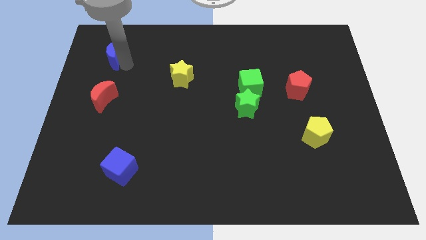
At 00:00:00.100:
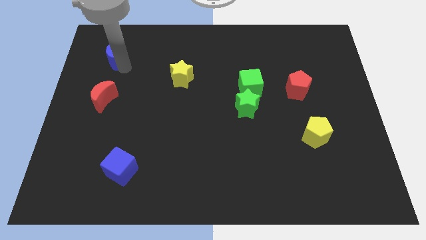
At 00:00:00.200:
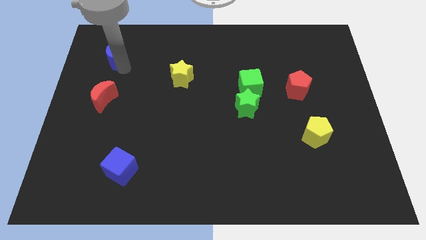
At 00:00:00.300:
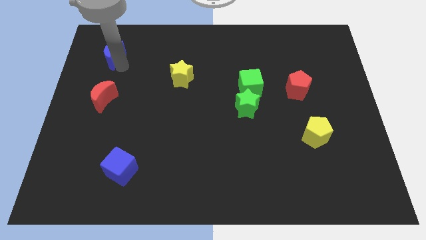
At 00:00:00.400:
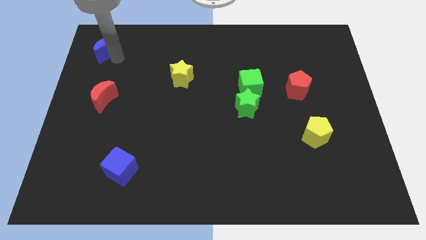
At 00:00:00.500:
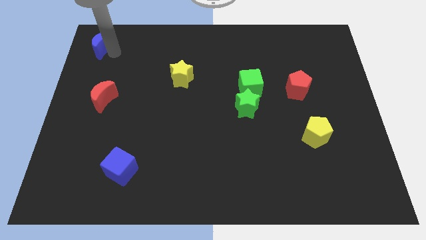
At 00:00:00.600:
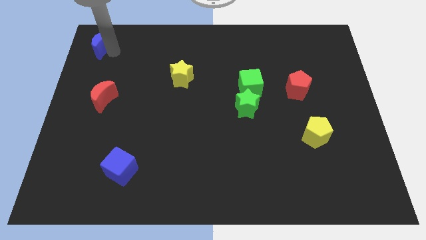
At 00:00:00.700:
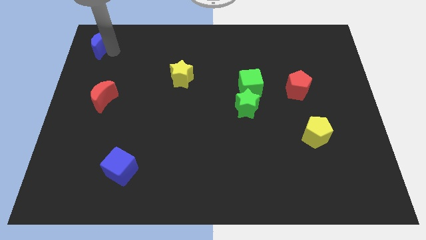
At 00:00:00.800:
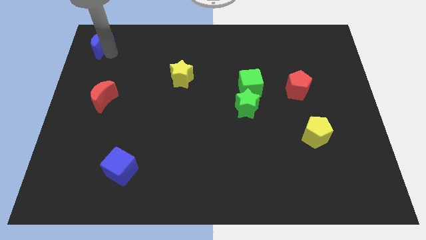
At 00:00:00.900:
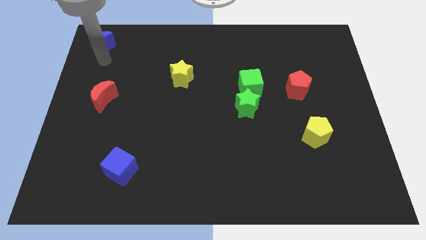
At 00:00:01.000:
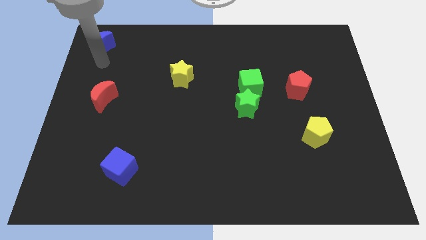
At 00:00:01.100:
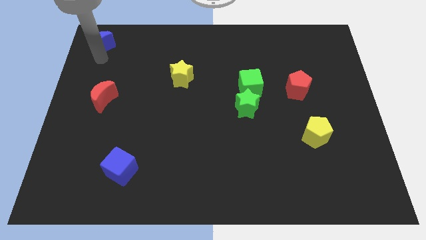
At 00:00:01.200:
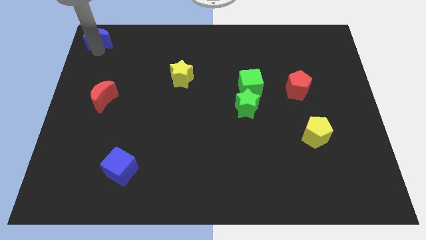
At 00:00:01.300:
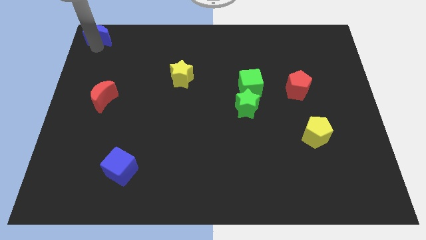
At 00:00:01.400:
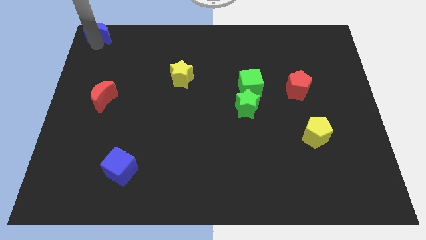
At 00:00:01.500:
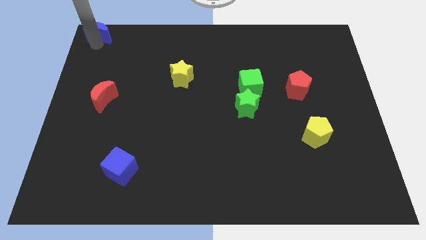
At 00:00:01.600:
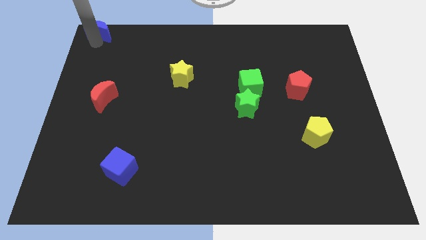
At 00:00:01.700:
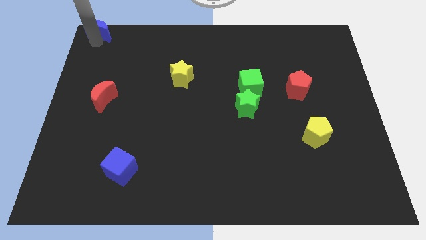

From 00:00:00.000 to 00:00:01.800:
move the blue crescent to the top left corner of the board

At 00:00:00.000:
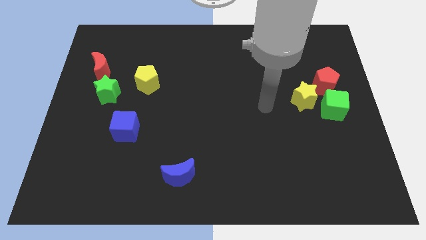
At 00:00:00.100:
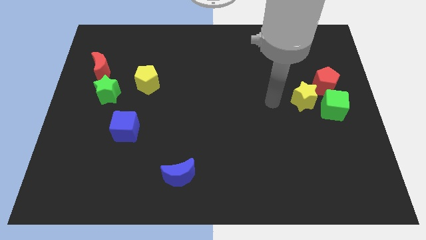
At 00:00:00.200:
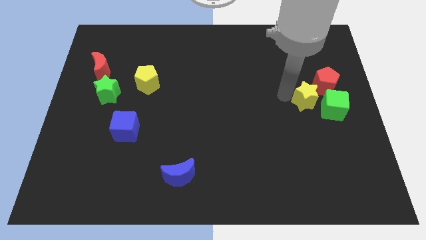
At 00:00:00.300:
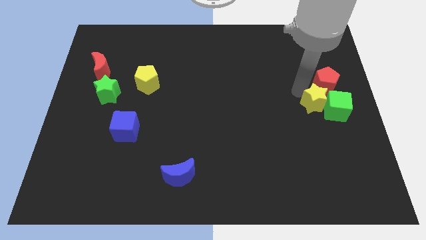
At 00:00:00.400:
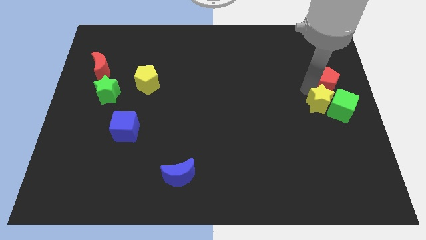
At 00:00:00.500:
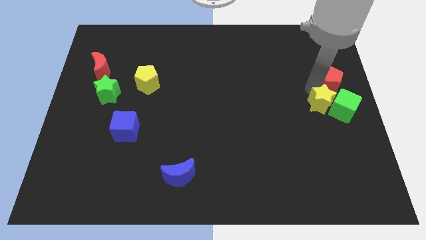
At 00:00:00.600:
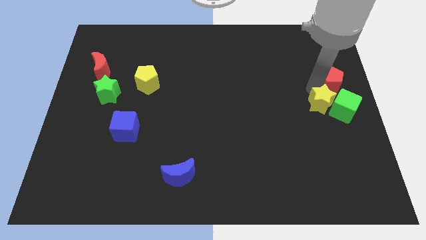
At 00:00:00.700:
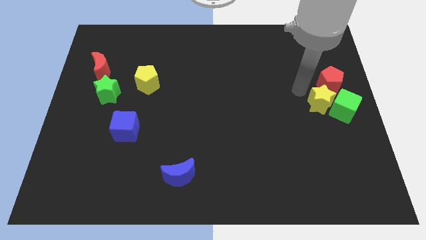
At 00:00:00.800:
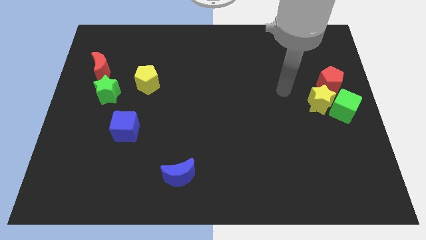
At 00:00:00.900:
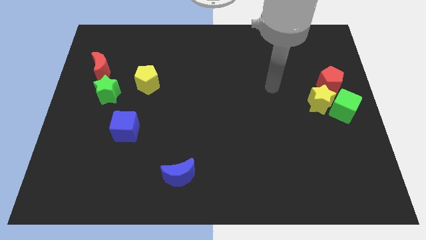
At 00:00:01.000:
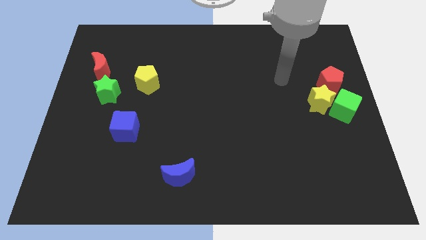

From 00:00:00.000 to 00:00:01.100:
place yellow star below red pentagon

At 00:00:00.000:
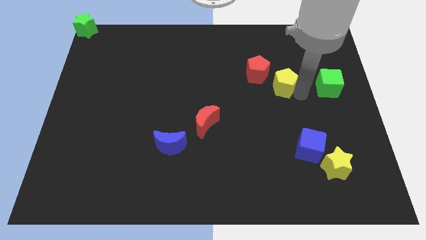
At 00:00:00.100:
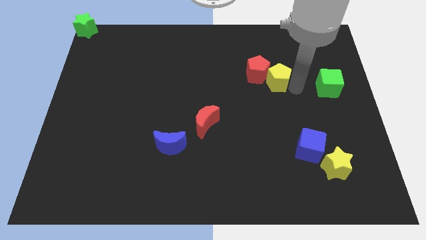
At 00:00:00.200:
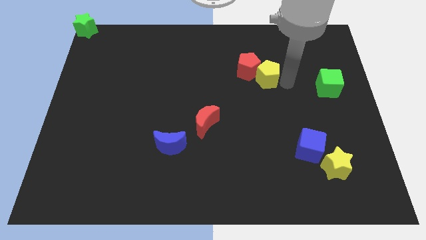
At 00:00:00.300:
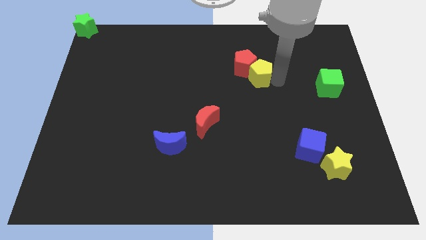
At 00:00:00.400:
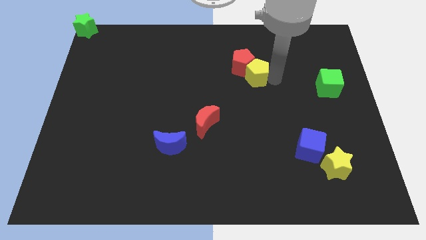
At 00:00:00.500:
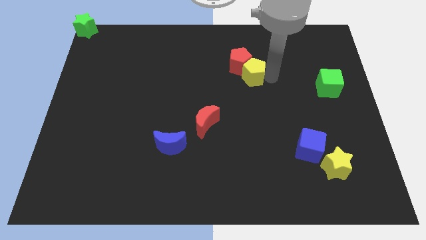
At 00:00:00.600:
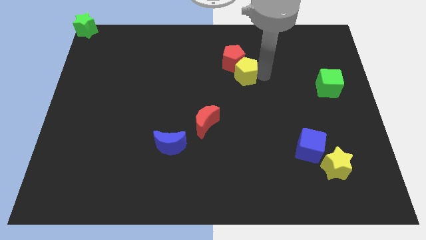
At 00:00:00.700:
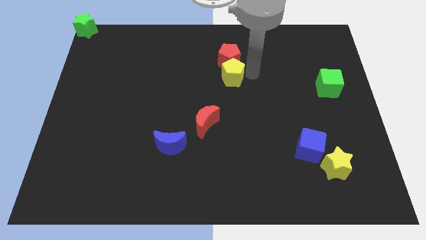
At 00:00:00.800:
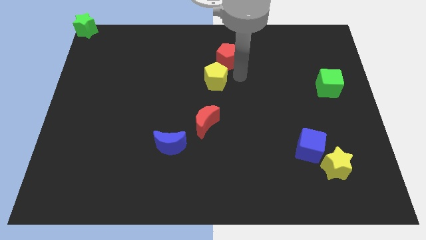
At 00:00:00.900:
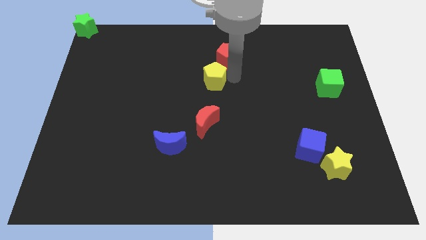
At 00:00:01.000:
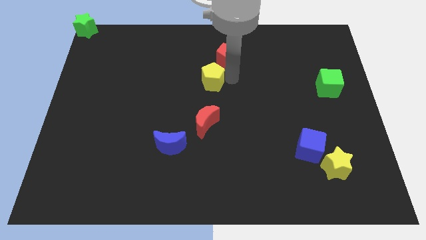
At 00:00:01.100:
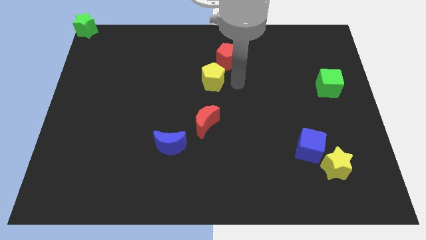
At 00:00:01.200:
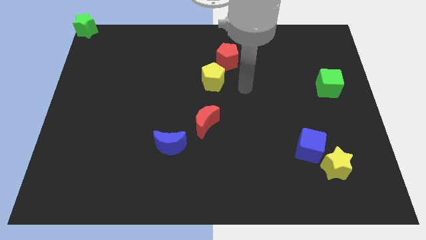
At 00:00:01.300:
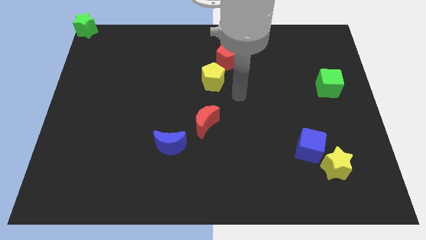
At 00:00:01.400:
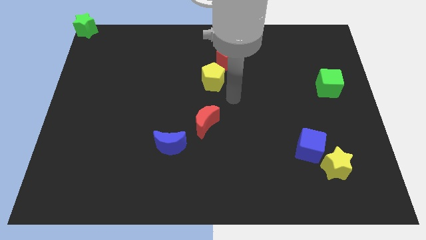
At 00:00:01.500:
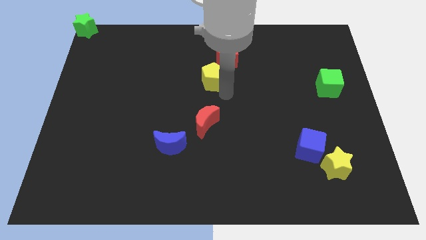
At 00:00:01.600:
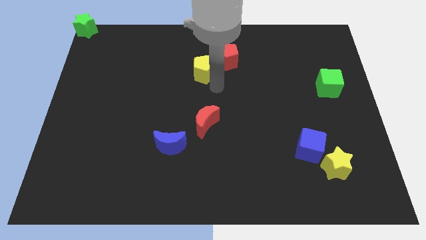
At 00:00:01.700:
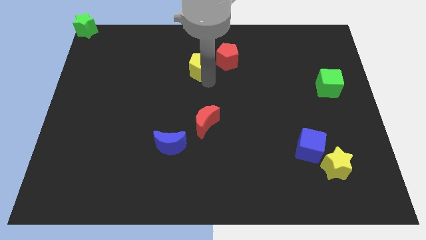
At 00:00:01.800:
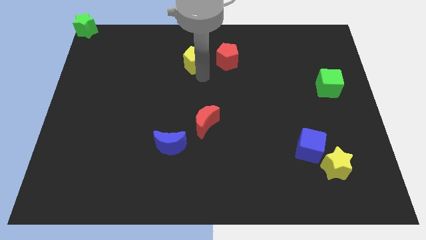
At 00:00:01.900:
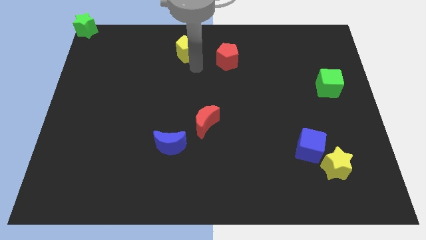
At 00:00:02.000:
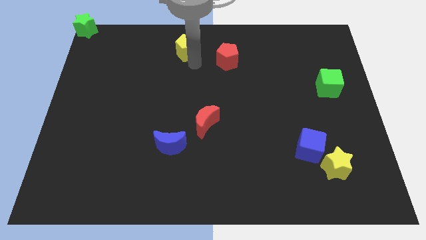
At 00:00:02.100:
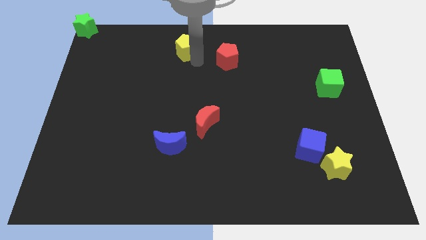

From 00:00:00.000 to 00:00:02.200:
move yellow pentagon towards top

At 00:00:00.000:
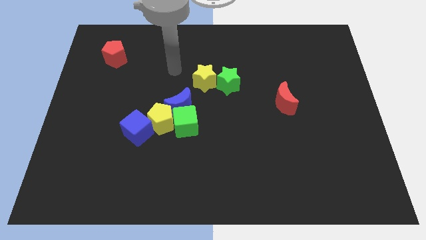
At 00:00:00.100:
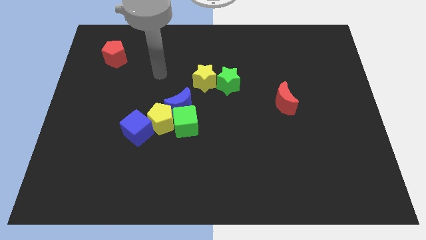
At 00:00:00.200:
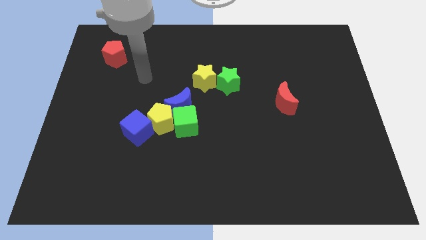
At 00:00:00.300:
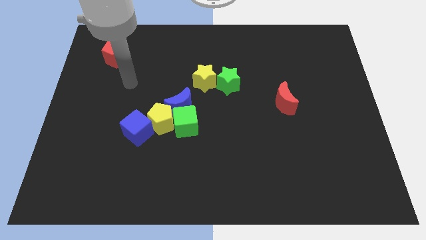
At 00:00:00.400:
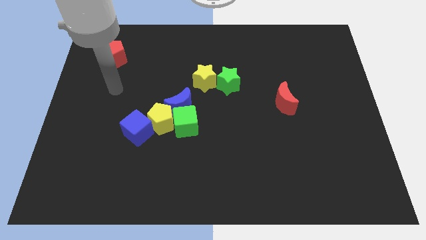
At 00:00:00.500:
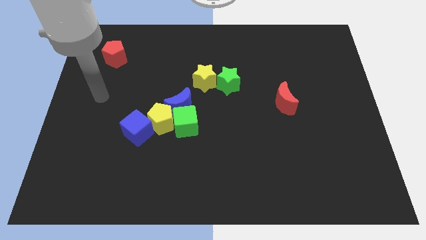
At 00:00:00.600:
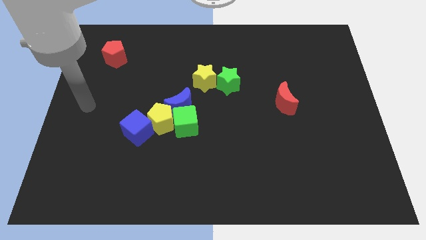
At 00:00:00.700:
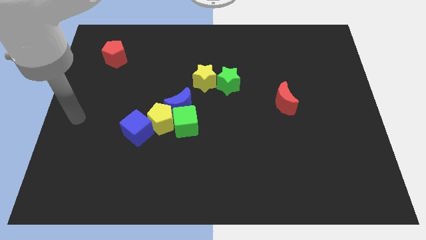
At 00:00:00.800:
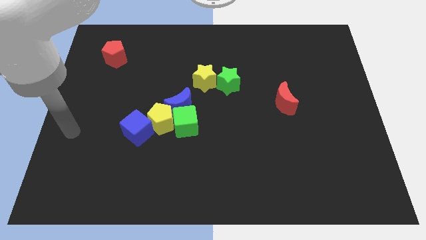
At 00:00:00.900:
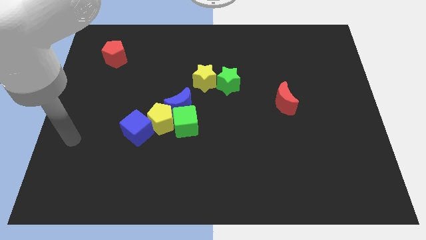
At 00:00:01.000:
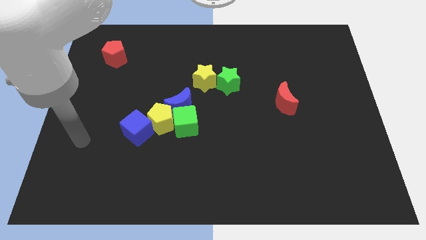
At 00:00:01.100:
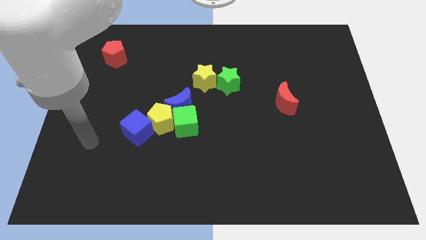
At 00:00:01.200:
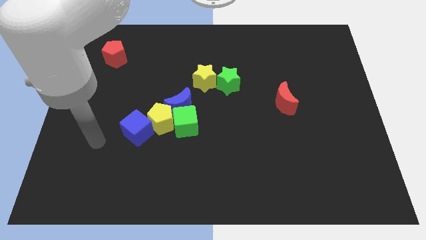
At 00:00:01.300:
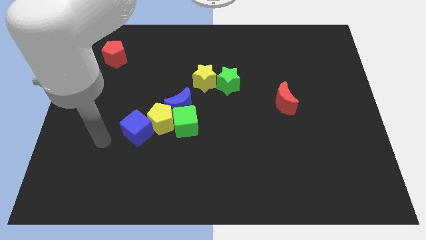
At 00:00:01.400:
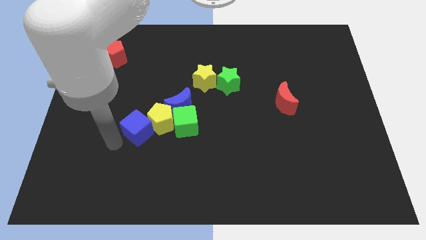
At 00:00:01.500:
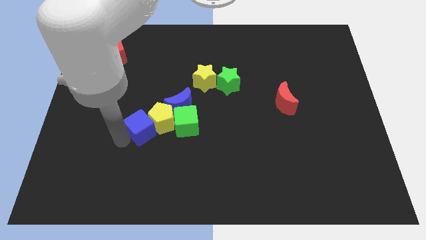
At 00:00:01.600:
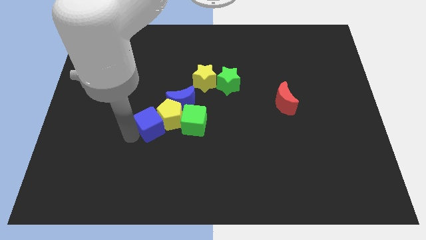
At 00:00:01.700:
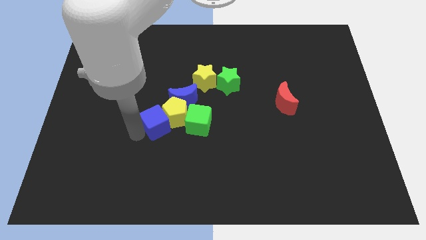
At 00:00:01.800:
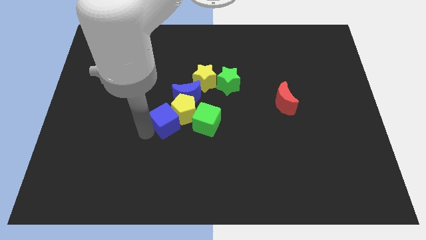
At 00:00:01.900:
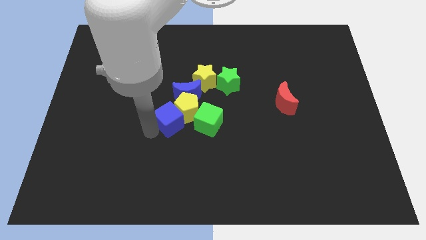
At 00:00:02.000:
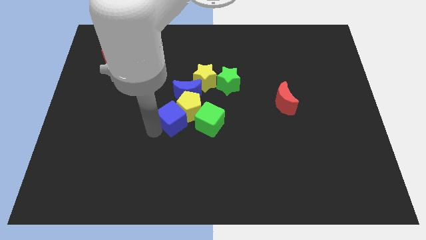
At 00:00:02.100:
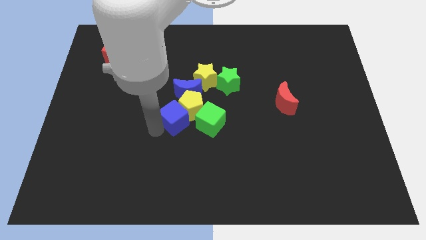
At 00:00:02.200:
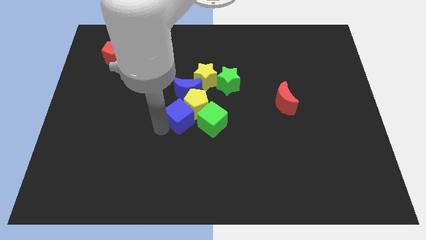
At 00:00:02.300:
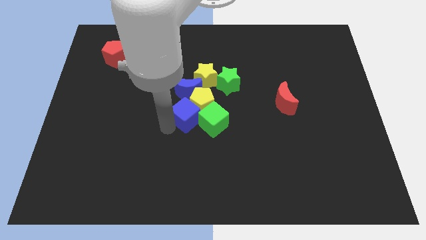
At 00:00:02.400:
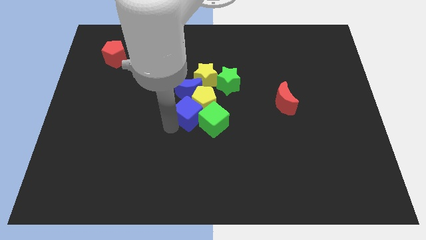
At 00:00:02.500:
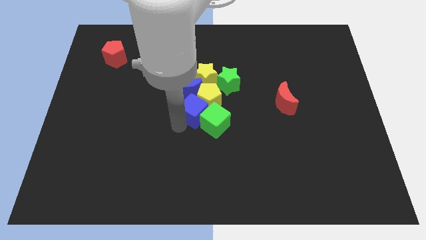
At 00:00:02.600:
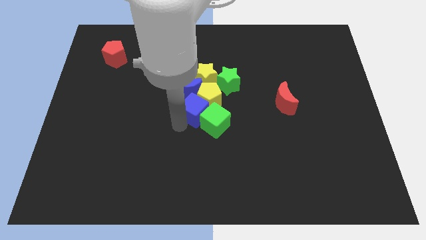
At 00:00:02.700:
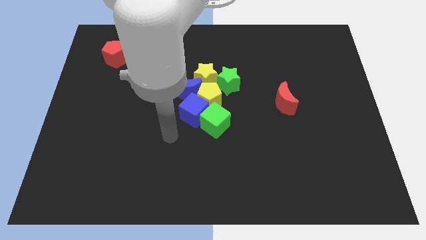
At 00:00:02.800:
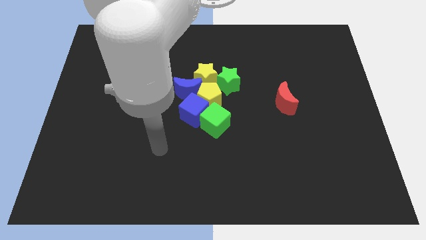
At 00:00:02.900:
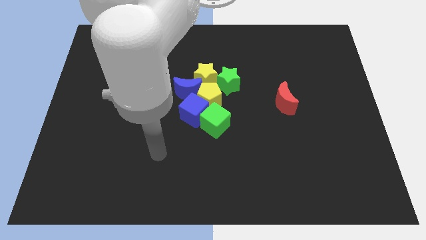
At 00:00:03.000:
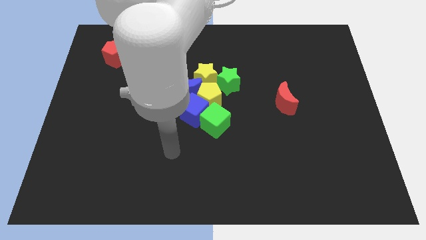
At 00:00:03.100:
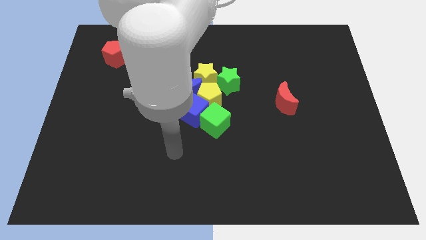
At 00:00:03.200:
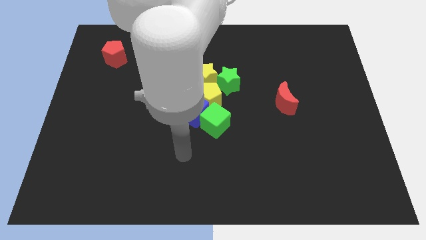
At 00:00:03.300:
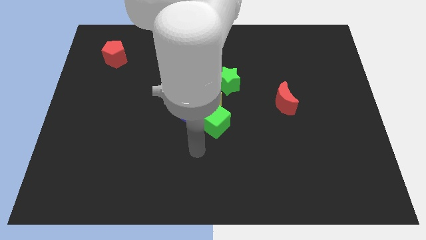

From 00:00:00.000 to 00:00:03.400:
move the blue cube to the left of the yellow pentagon towards the center

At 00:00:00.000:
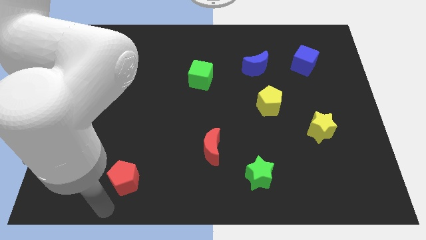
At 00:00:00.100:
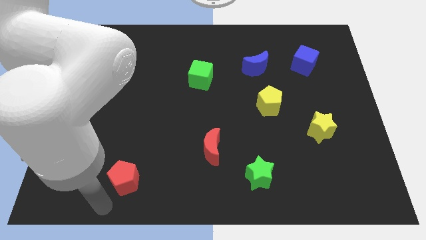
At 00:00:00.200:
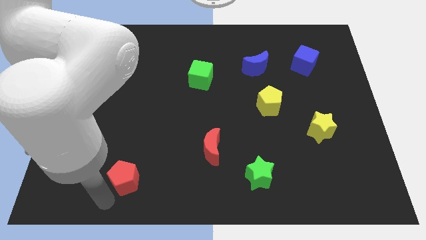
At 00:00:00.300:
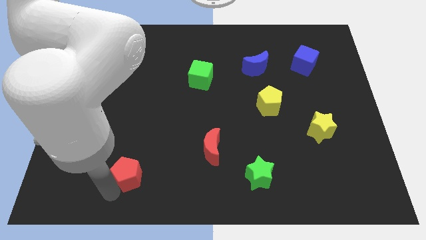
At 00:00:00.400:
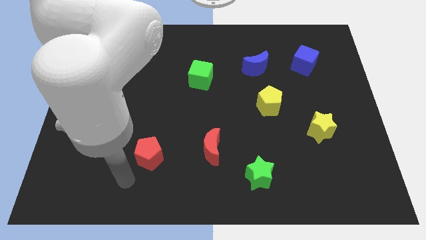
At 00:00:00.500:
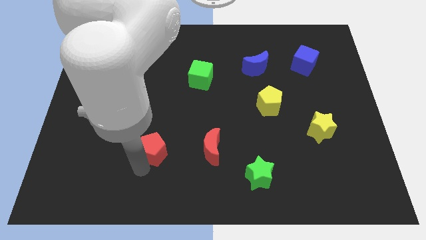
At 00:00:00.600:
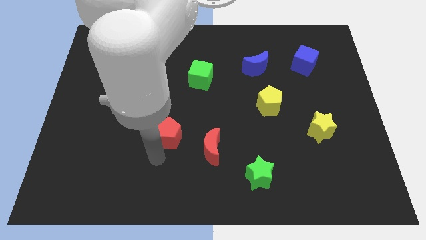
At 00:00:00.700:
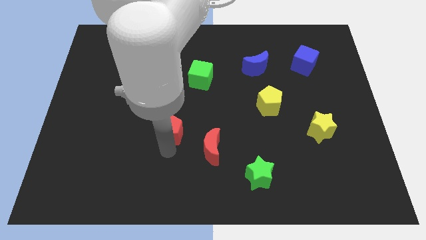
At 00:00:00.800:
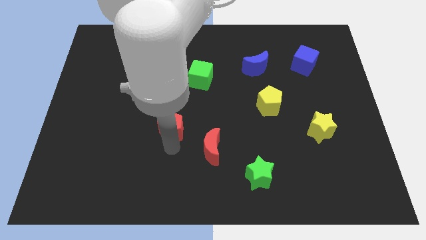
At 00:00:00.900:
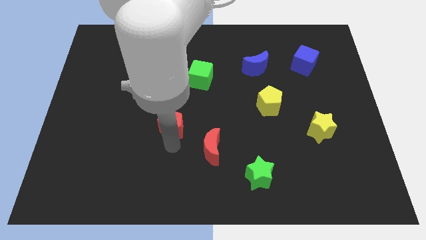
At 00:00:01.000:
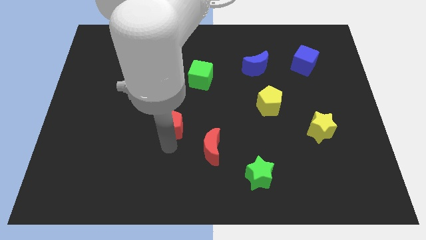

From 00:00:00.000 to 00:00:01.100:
place the red pentagon towards the top left side of the red crescent
